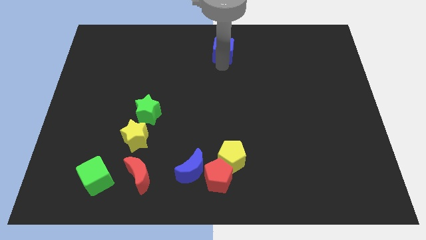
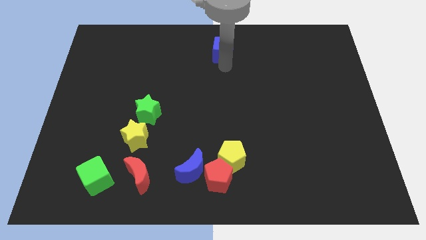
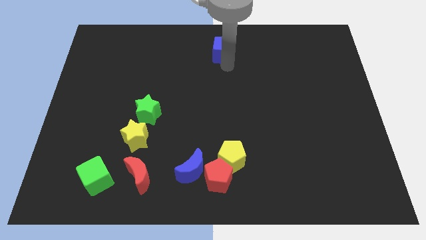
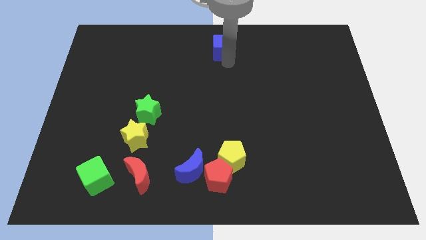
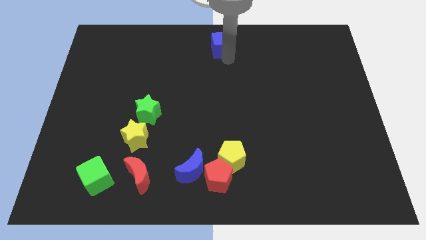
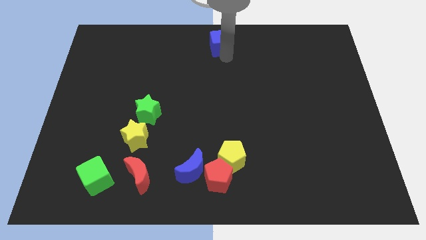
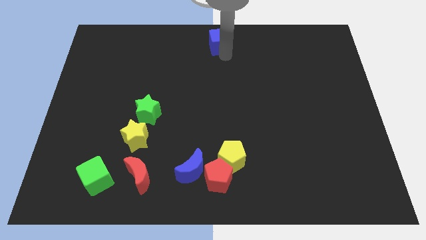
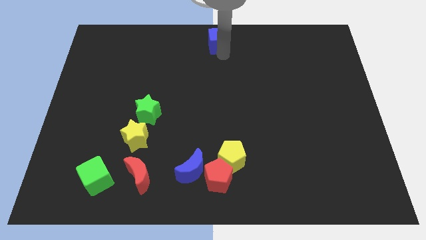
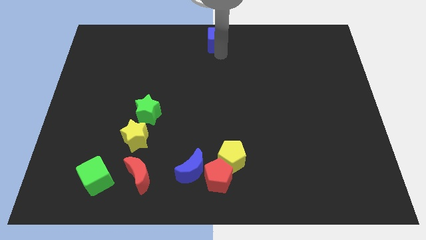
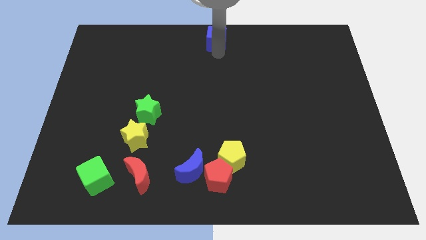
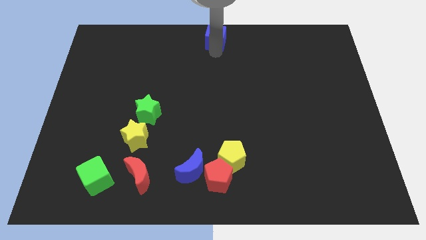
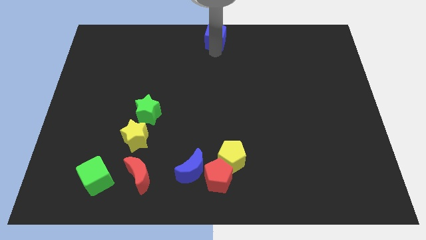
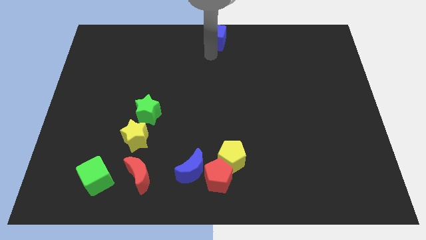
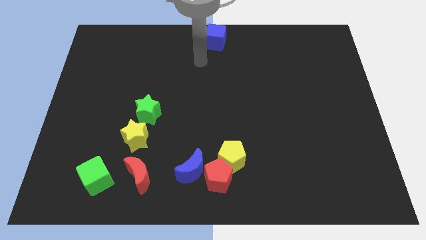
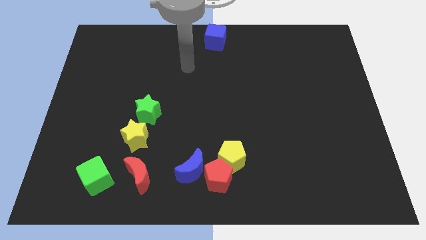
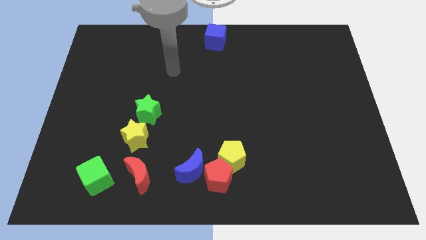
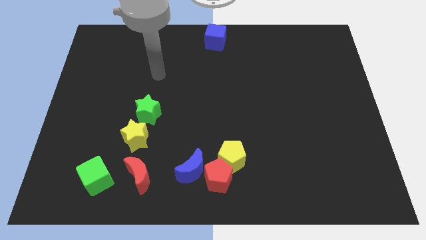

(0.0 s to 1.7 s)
push the blue cube to the top center of the board

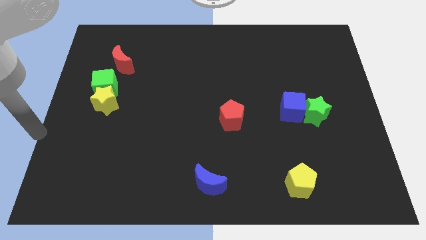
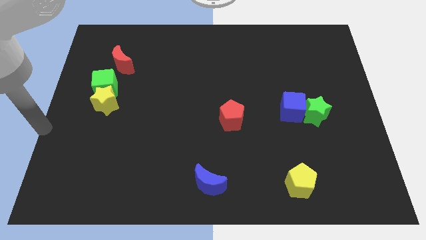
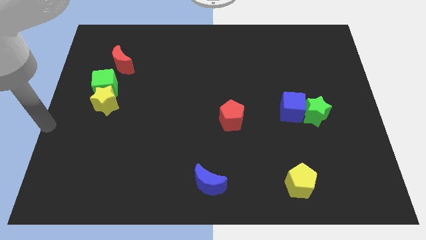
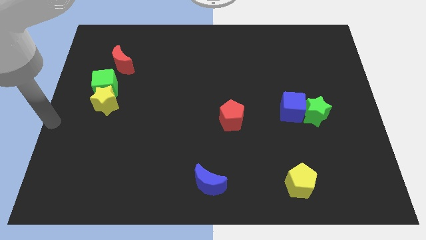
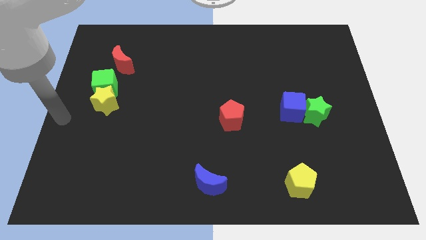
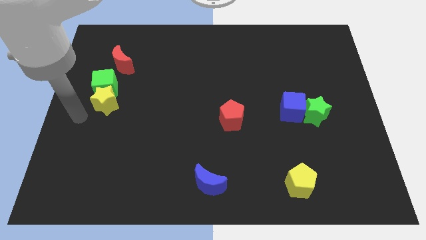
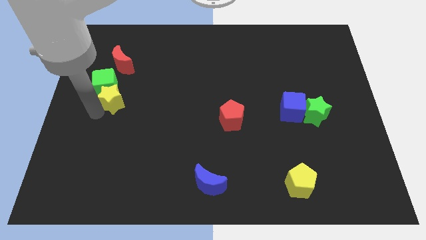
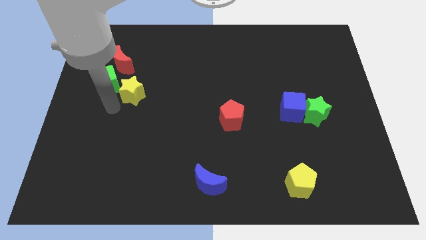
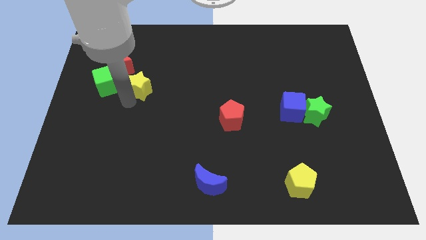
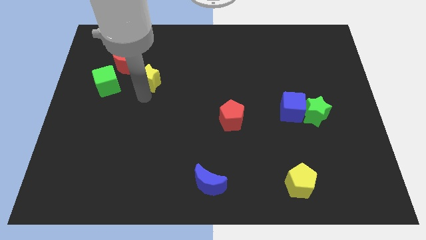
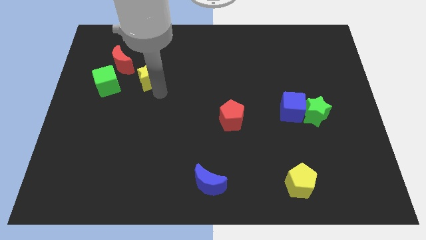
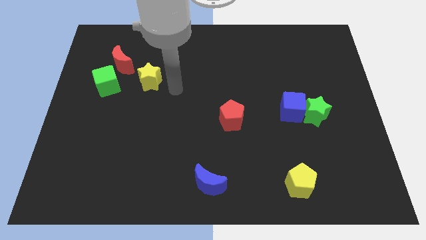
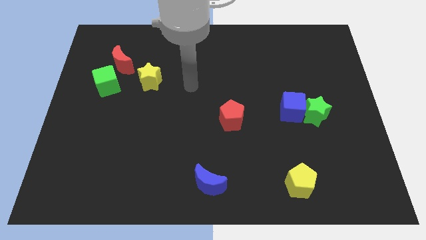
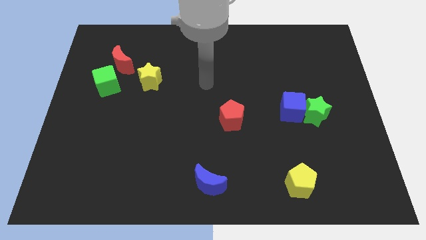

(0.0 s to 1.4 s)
separate yellow star from the green cube

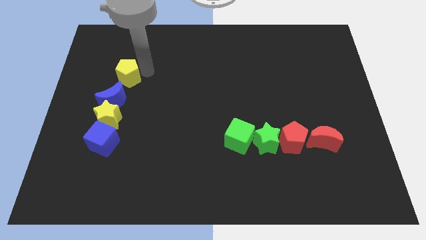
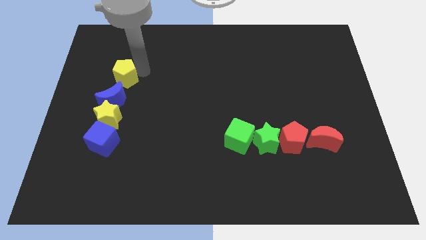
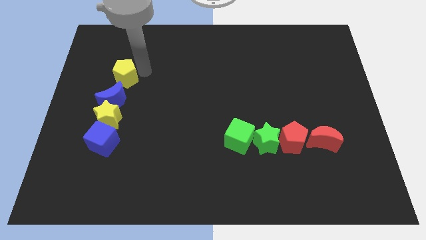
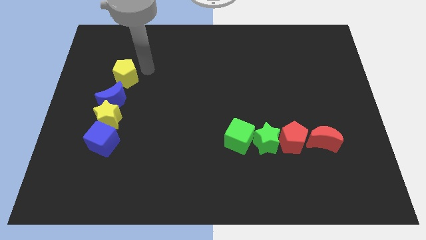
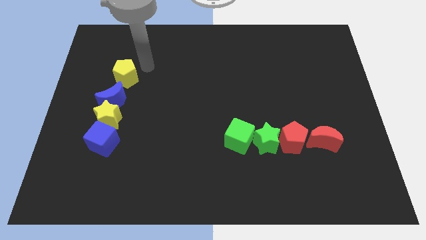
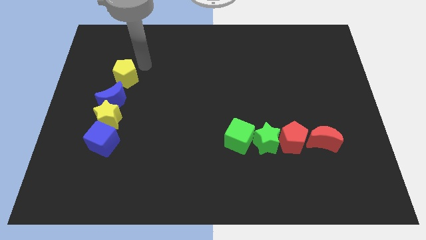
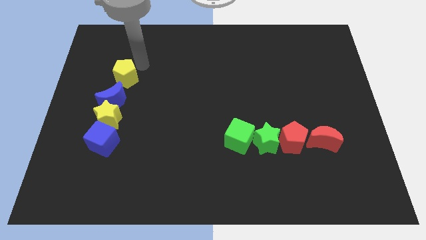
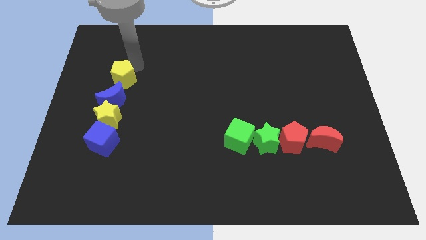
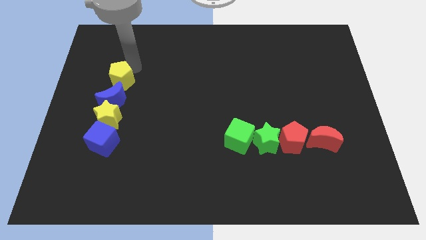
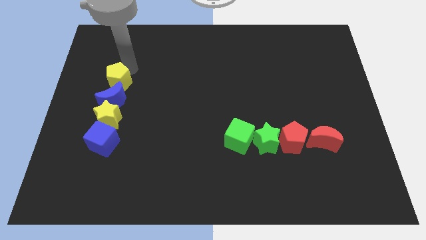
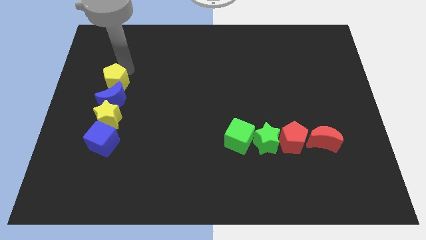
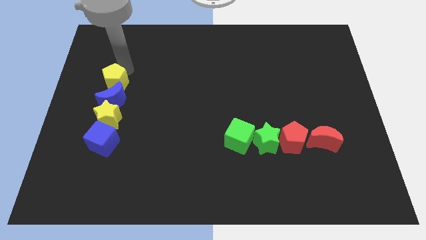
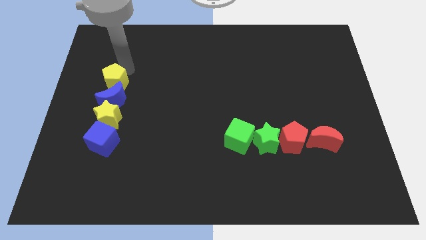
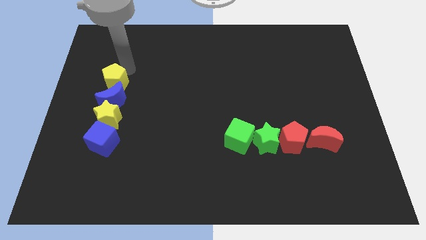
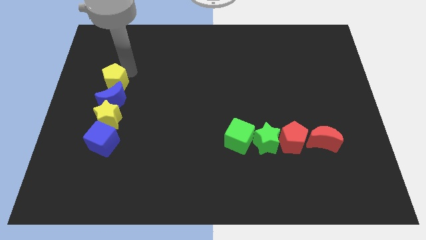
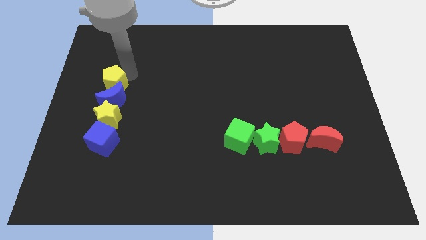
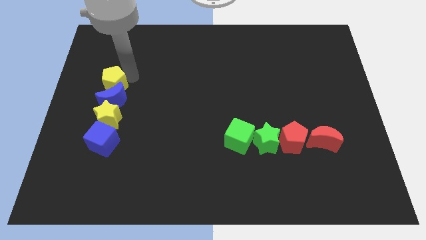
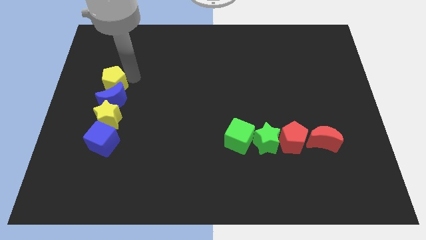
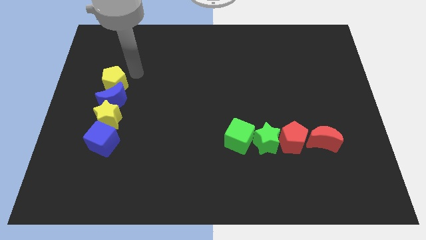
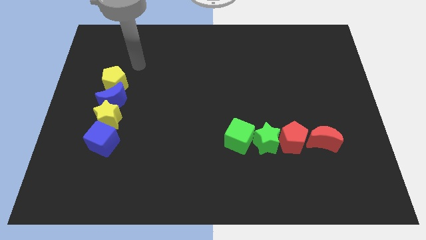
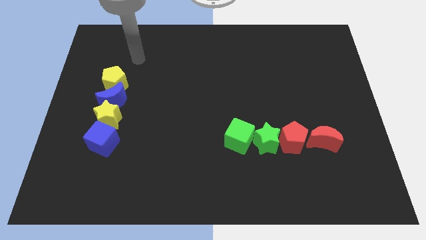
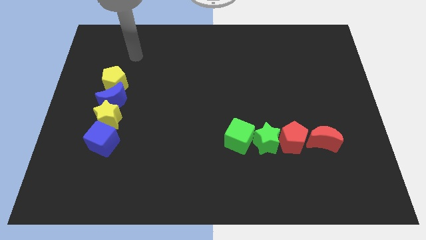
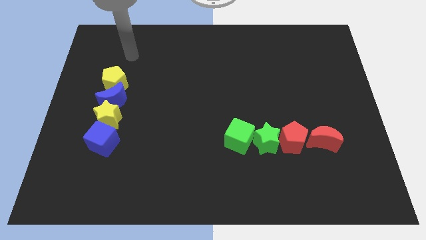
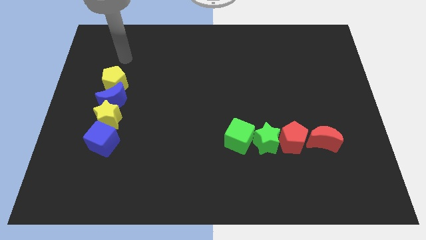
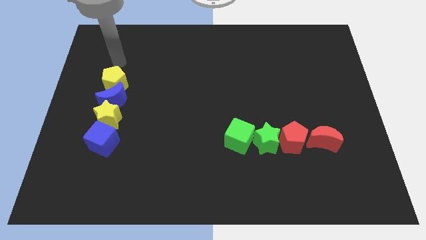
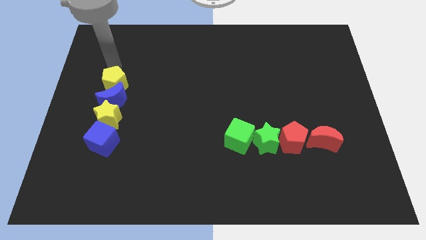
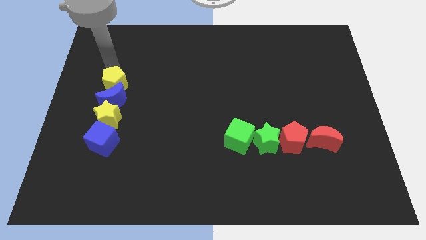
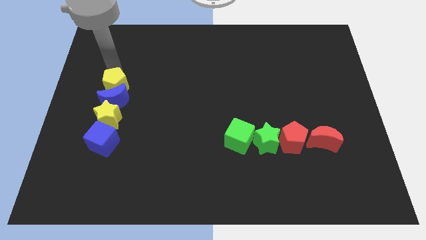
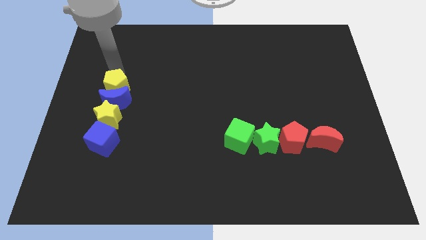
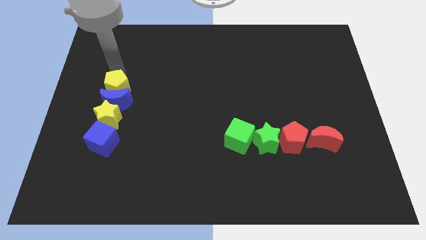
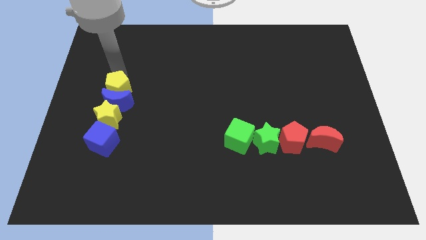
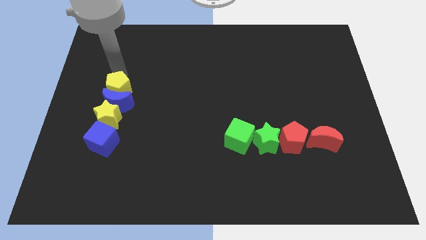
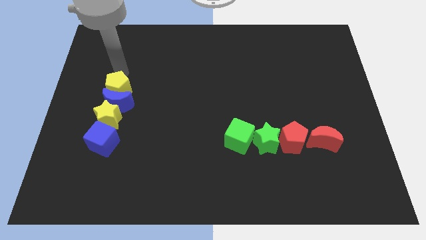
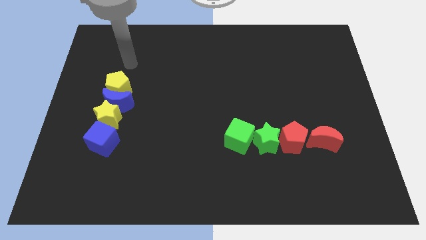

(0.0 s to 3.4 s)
push the yellow pentagon into the blue crescent

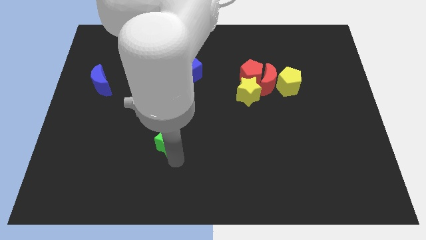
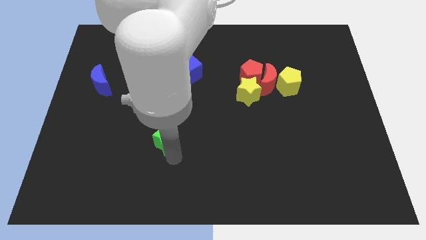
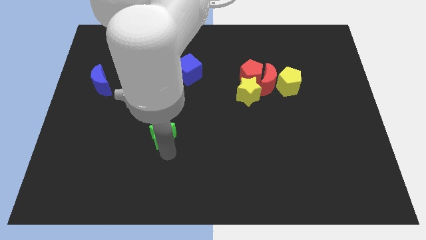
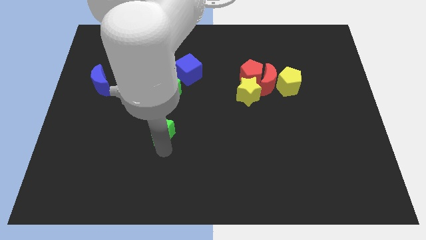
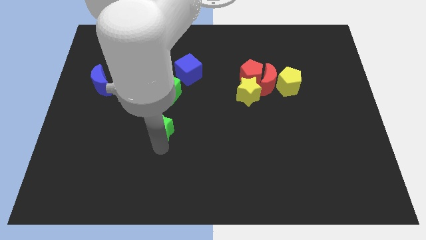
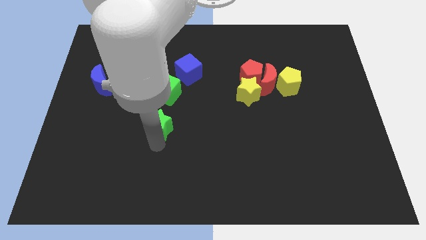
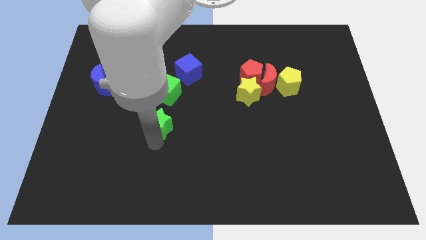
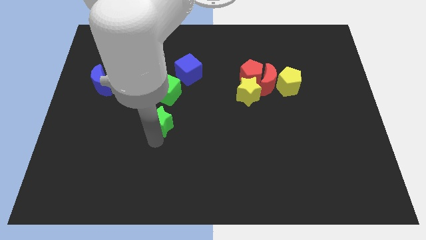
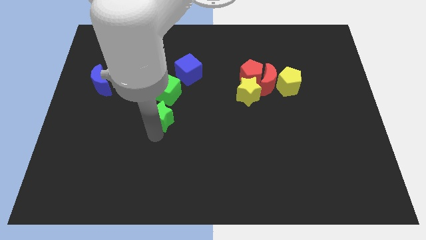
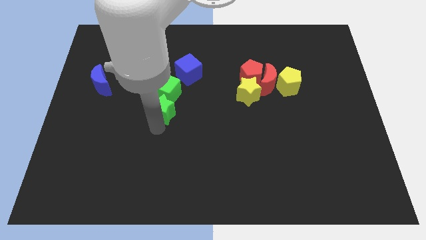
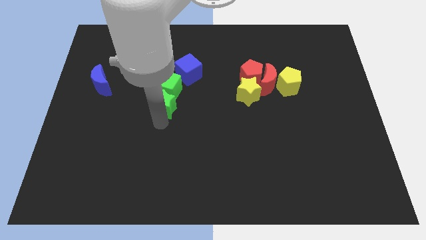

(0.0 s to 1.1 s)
move the green star into the bottom of the green cube

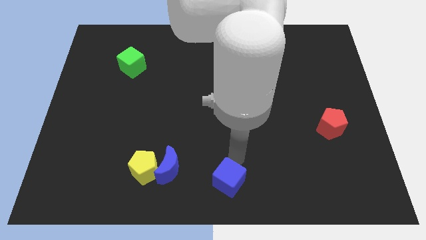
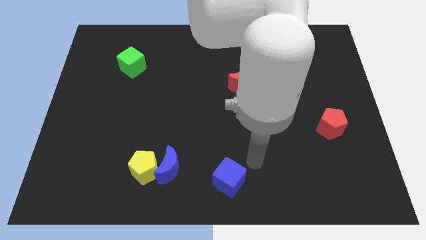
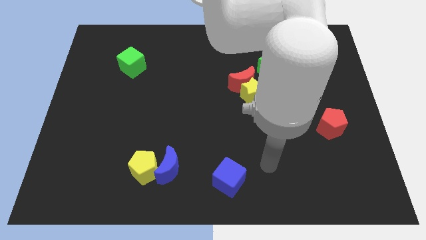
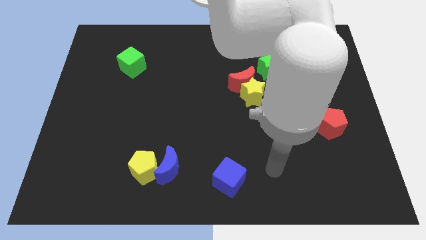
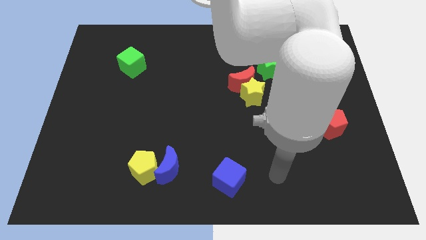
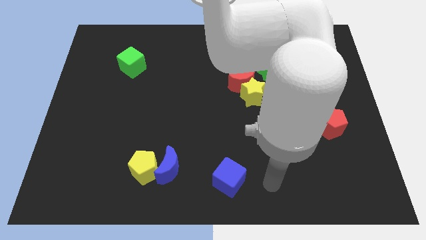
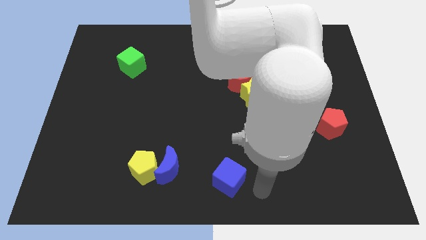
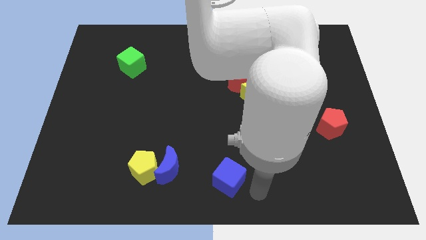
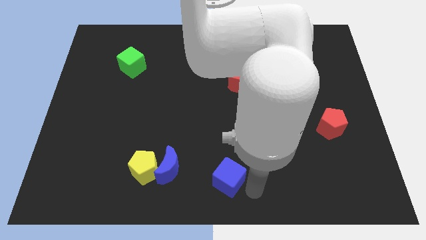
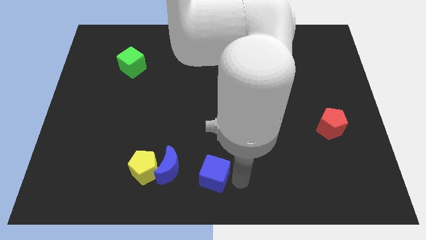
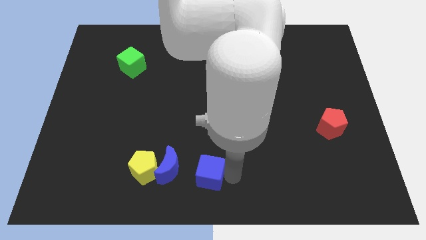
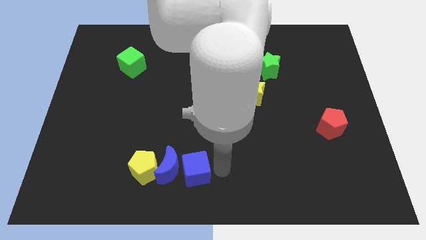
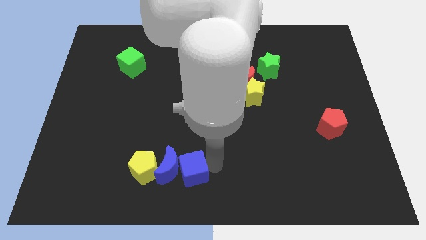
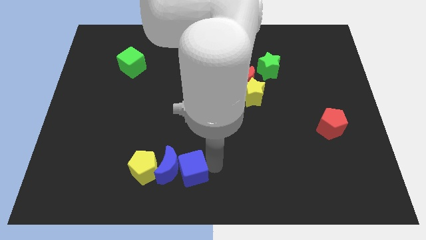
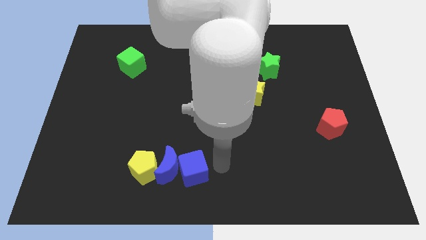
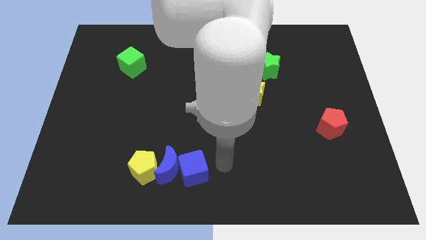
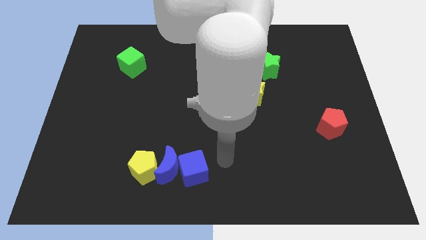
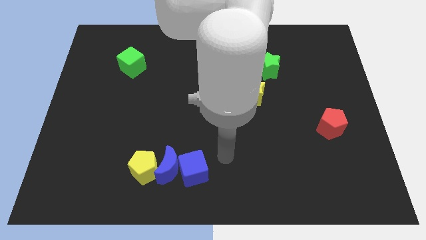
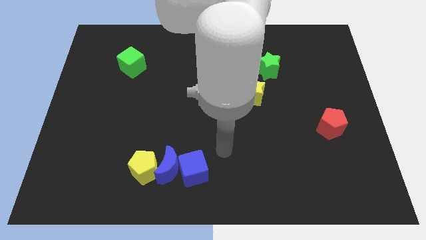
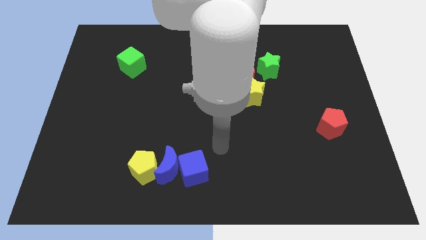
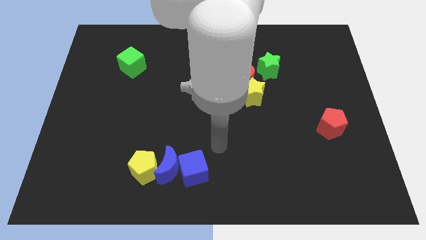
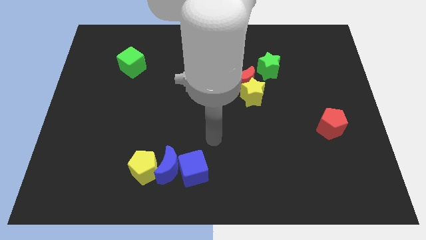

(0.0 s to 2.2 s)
push the blue cube into the blue moon
